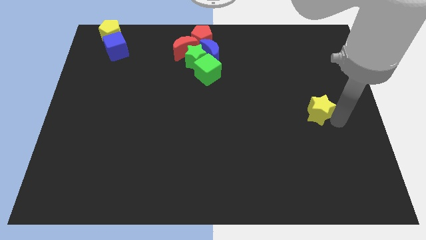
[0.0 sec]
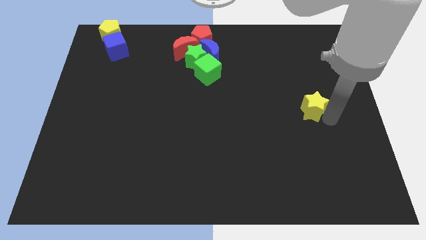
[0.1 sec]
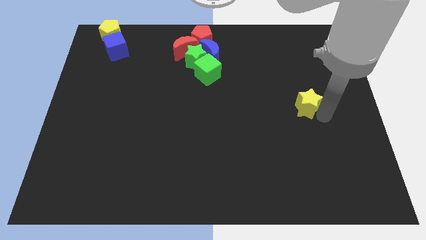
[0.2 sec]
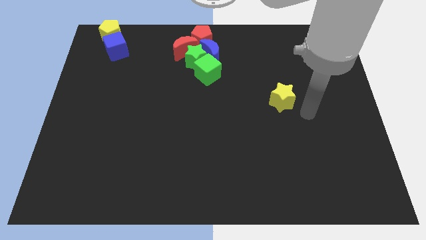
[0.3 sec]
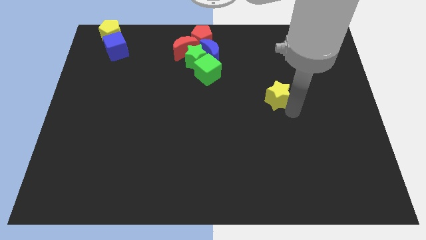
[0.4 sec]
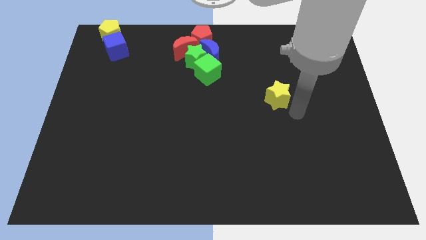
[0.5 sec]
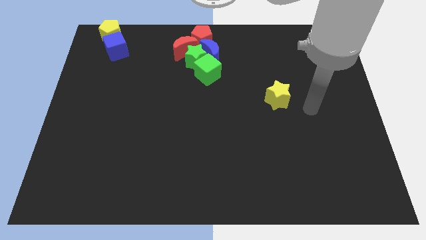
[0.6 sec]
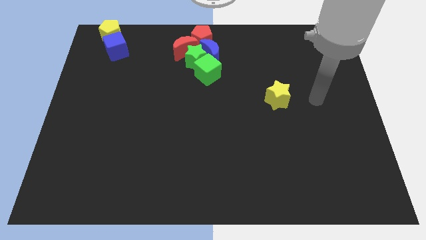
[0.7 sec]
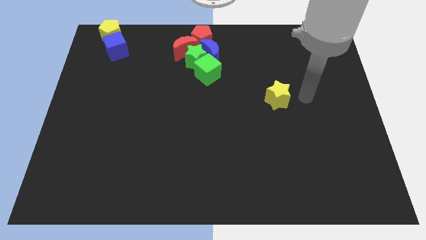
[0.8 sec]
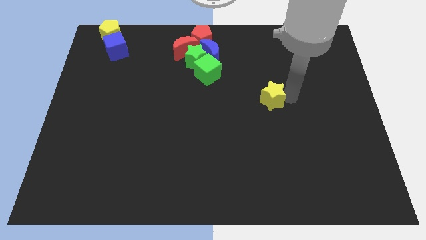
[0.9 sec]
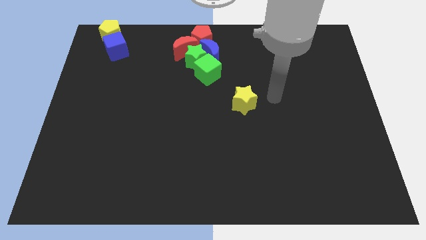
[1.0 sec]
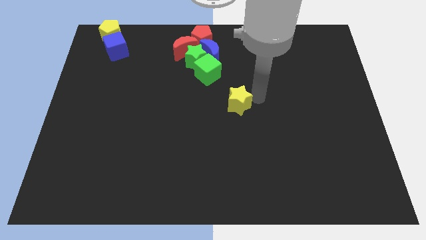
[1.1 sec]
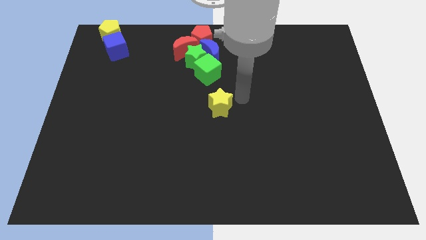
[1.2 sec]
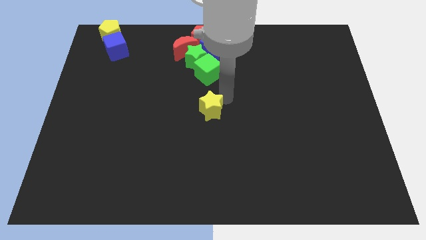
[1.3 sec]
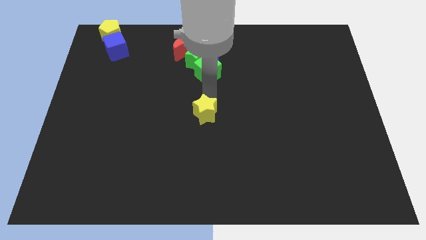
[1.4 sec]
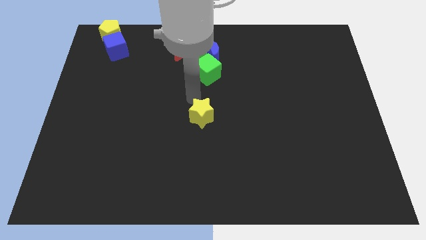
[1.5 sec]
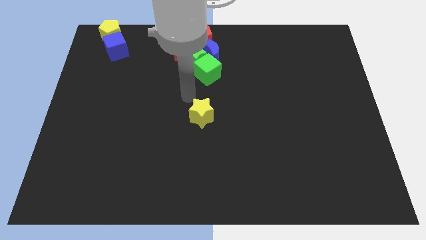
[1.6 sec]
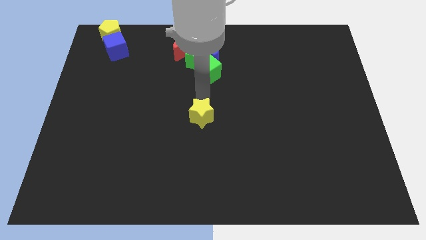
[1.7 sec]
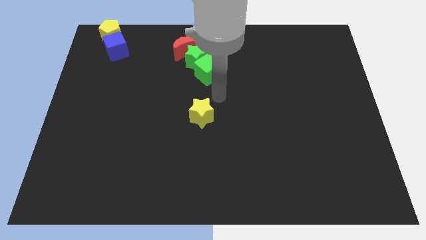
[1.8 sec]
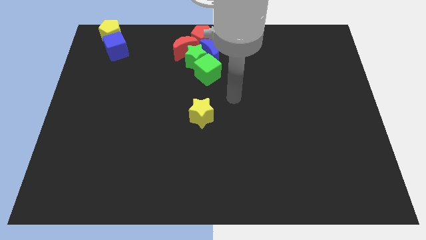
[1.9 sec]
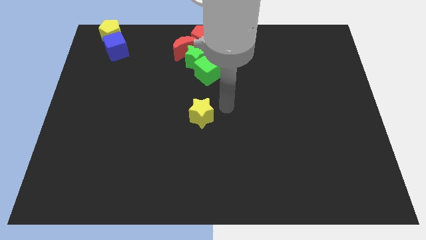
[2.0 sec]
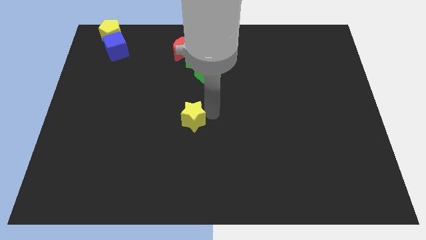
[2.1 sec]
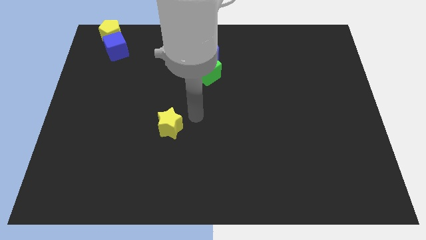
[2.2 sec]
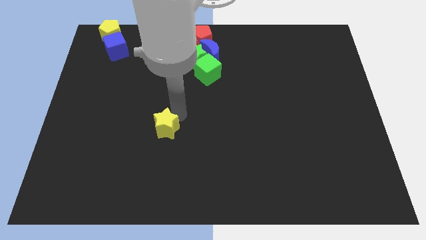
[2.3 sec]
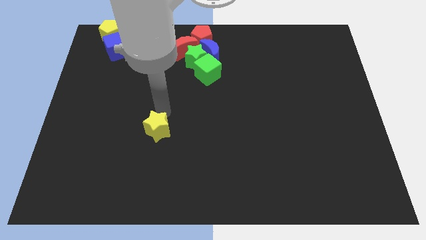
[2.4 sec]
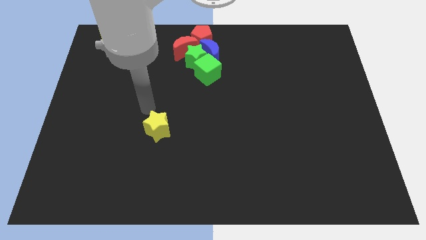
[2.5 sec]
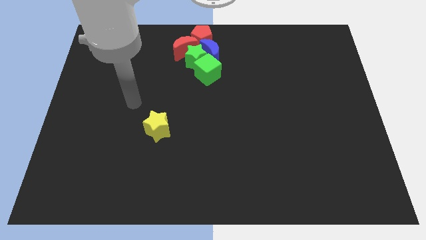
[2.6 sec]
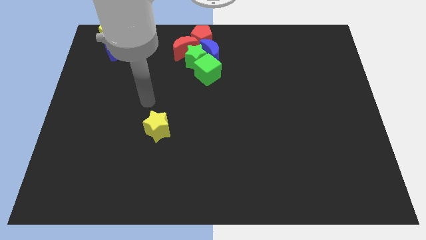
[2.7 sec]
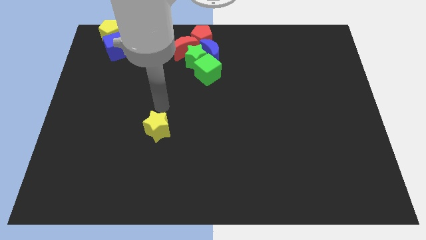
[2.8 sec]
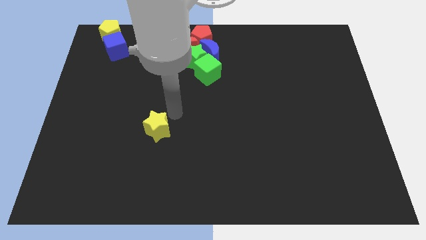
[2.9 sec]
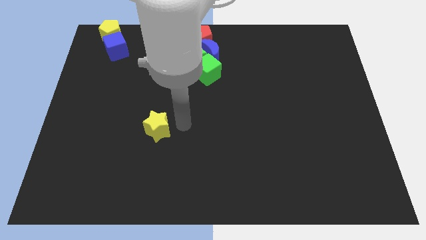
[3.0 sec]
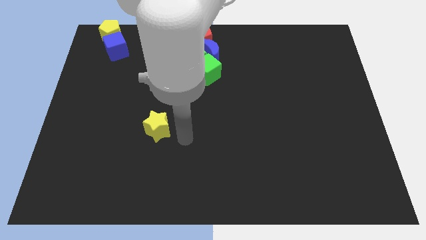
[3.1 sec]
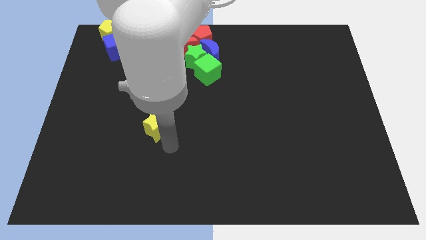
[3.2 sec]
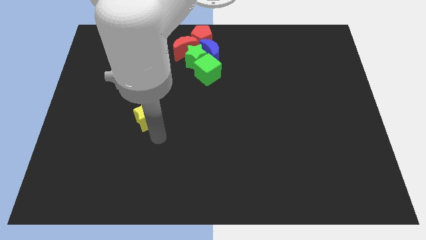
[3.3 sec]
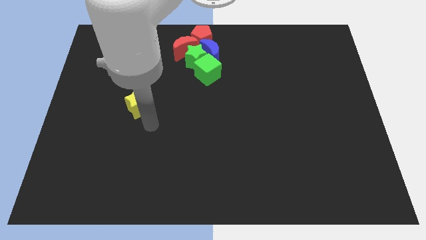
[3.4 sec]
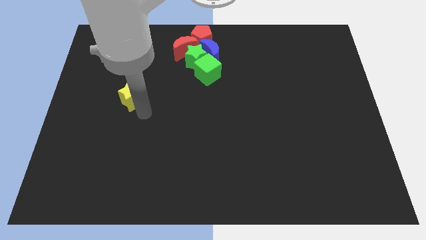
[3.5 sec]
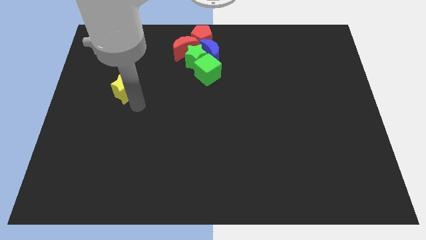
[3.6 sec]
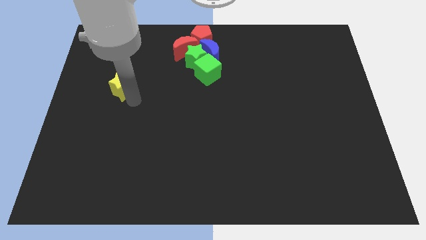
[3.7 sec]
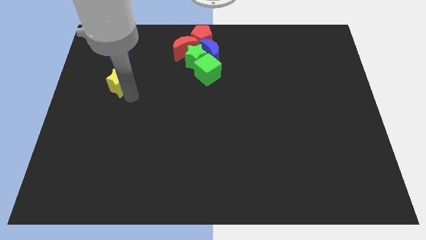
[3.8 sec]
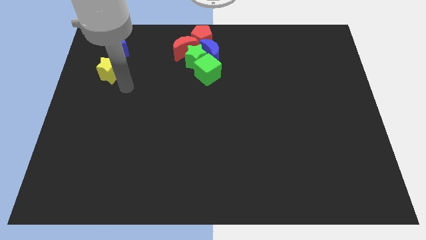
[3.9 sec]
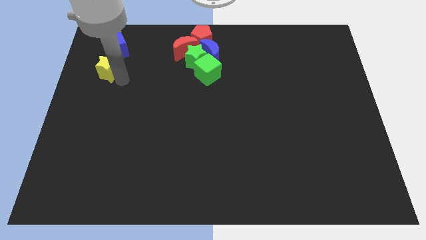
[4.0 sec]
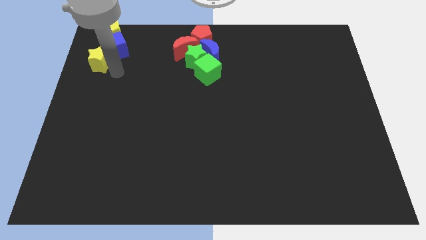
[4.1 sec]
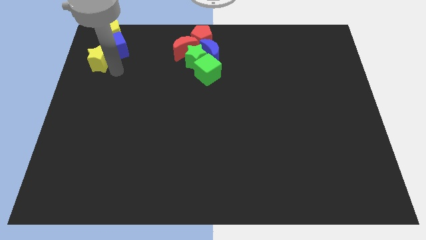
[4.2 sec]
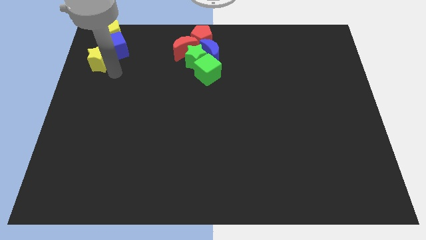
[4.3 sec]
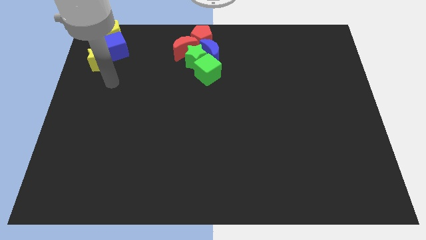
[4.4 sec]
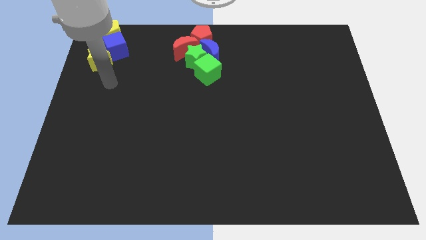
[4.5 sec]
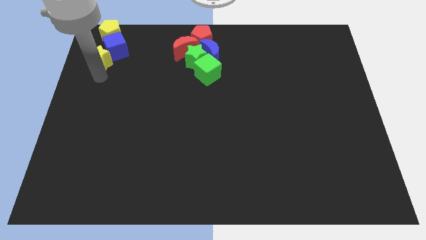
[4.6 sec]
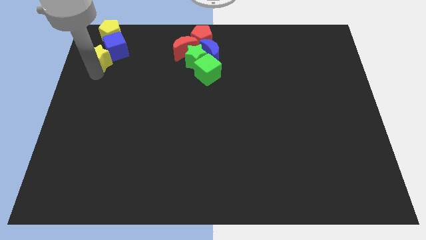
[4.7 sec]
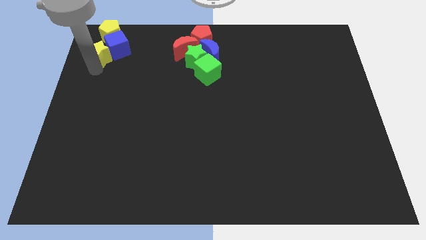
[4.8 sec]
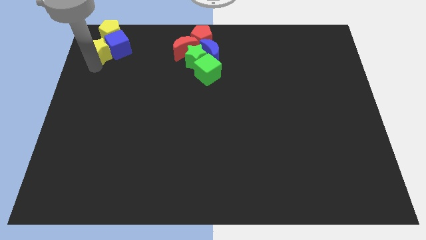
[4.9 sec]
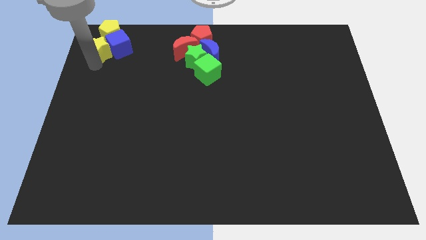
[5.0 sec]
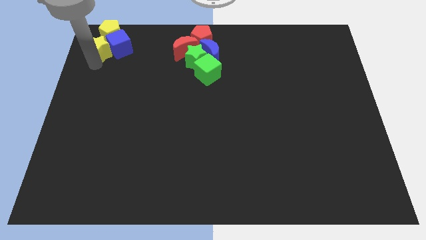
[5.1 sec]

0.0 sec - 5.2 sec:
place yellow star to the left of blue cube

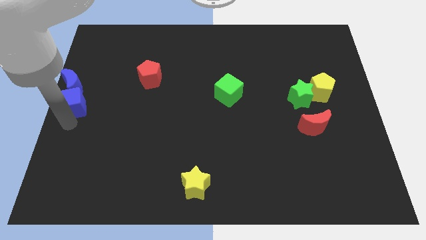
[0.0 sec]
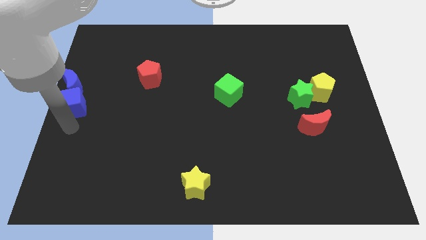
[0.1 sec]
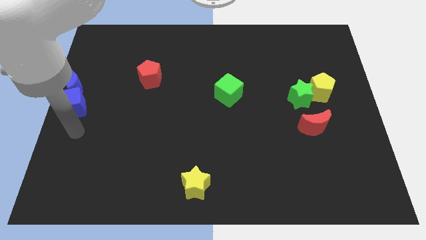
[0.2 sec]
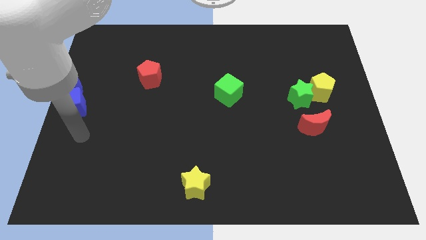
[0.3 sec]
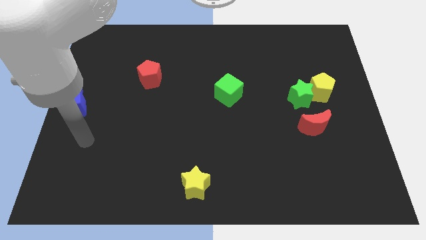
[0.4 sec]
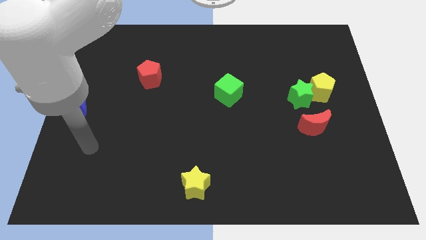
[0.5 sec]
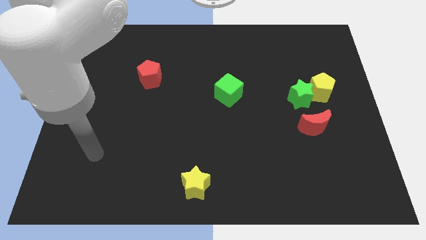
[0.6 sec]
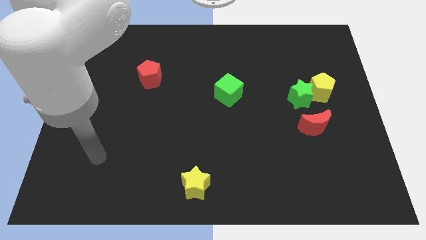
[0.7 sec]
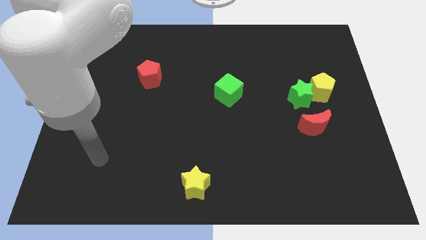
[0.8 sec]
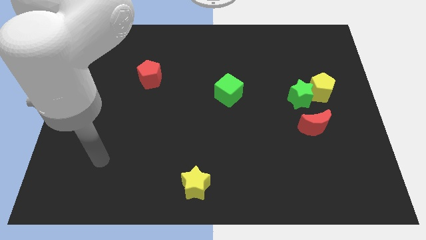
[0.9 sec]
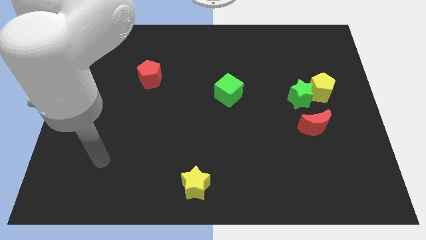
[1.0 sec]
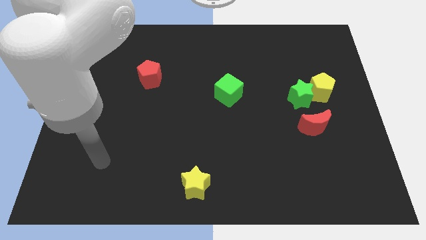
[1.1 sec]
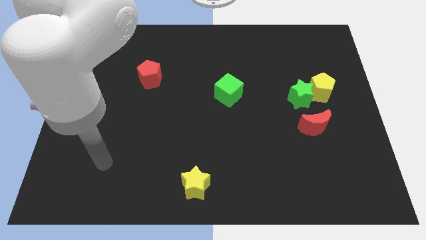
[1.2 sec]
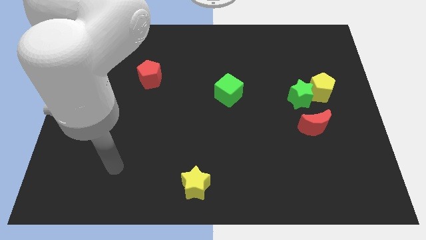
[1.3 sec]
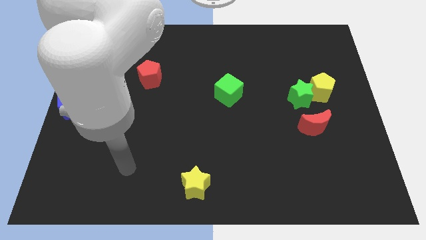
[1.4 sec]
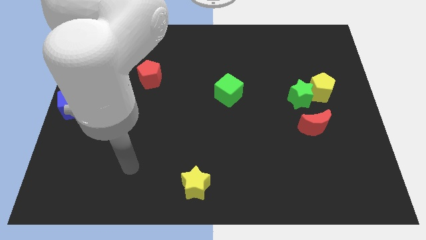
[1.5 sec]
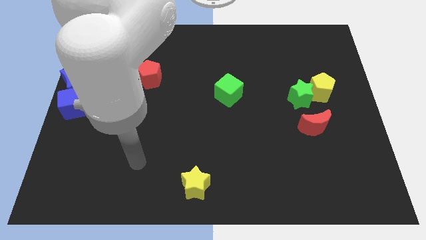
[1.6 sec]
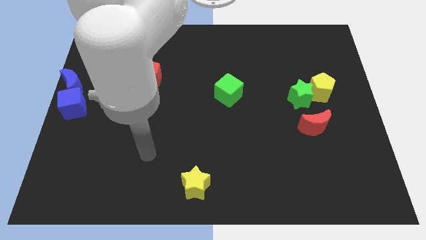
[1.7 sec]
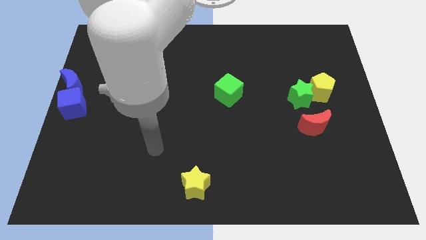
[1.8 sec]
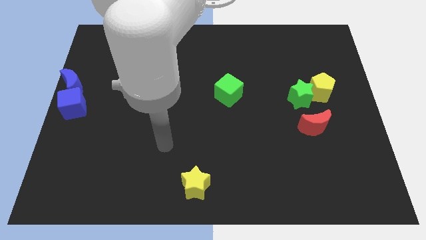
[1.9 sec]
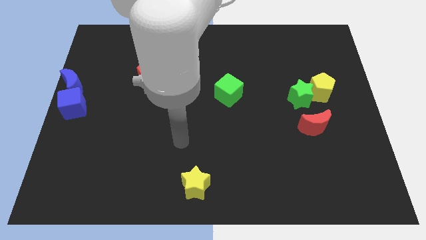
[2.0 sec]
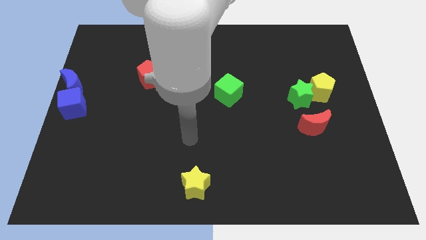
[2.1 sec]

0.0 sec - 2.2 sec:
move your arm above the yellow star

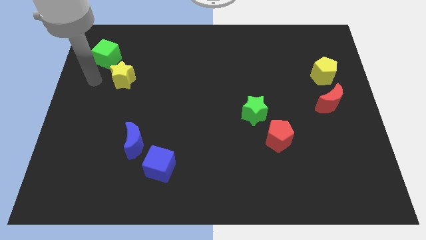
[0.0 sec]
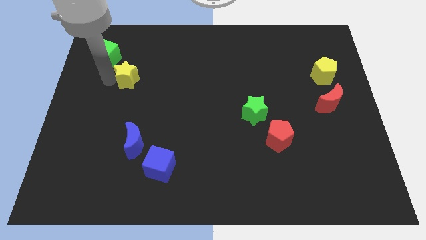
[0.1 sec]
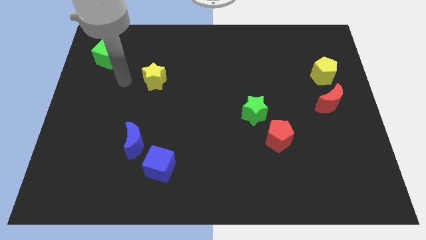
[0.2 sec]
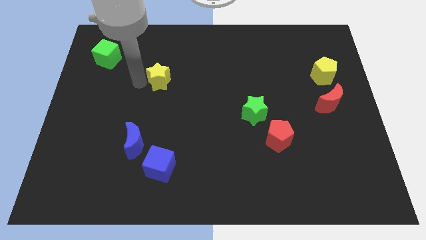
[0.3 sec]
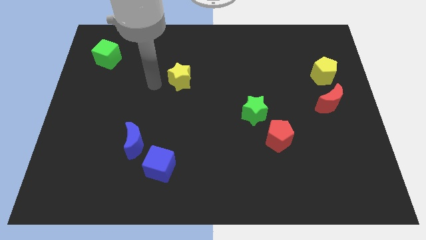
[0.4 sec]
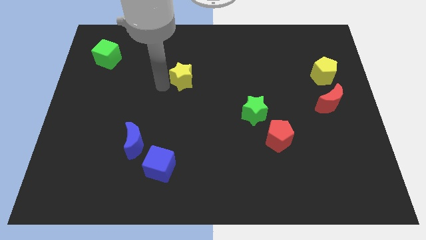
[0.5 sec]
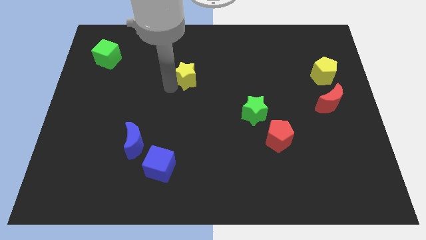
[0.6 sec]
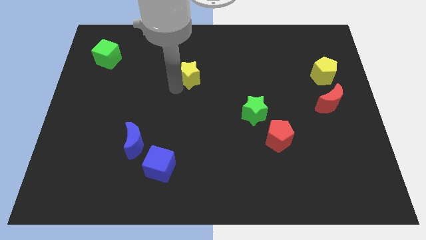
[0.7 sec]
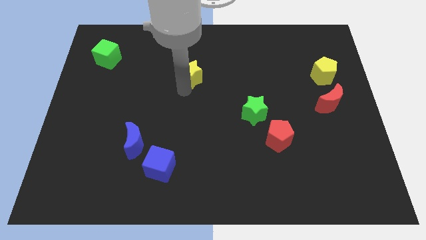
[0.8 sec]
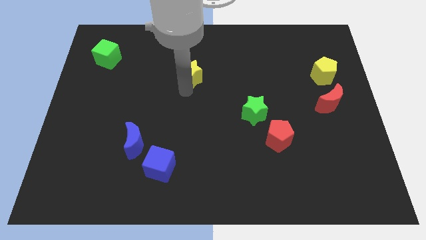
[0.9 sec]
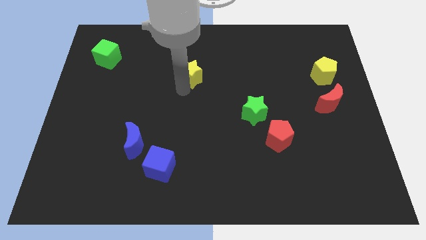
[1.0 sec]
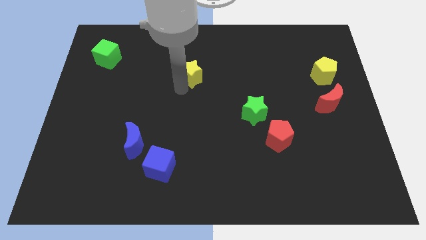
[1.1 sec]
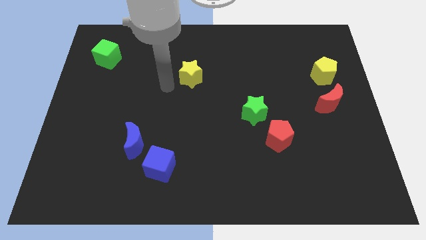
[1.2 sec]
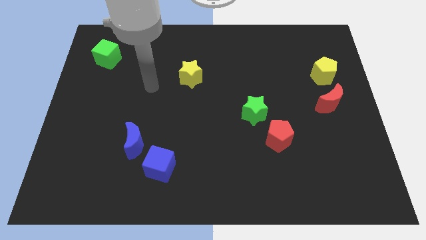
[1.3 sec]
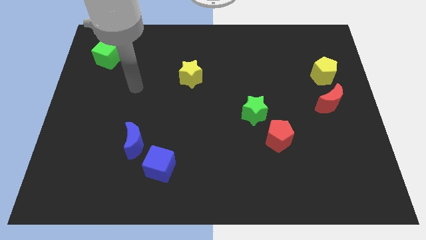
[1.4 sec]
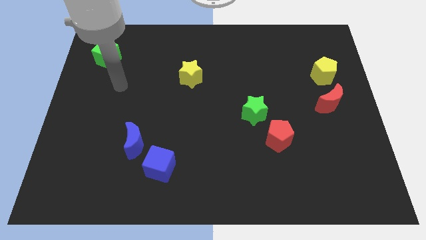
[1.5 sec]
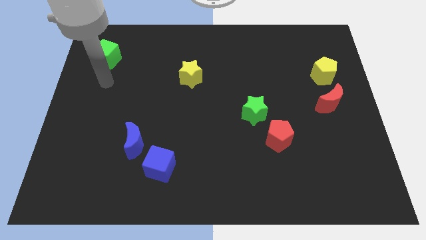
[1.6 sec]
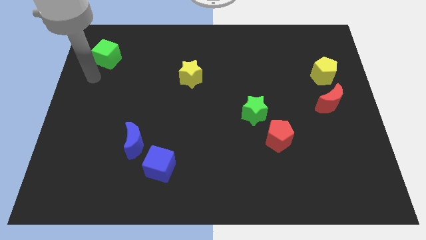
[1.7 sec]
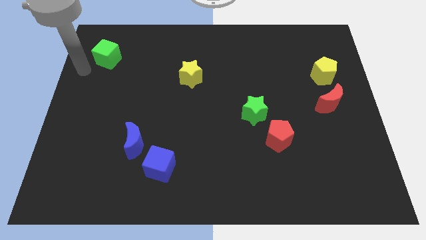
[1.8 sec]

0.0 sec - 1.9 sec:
push the yellow star towards the center
